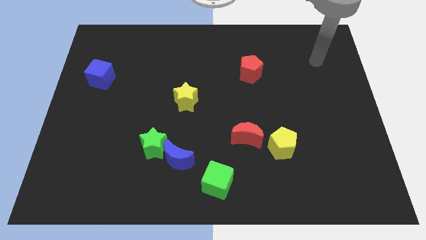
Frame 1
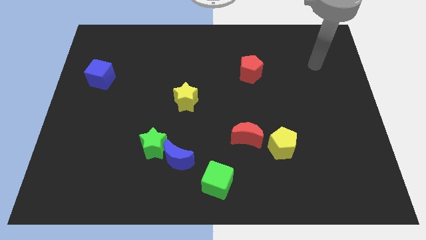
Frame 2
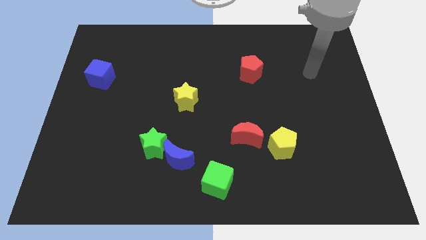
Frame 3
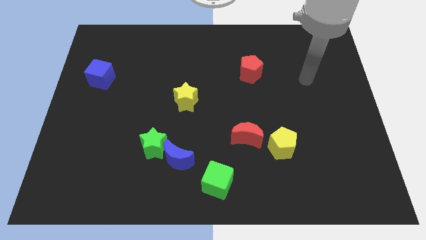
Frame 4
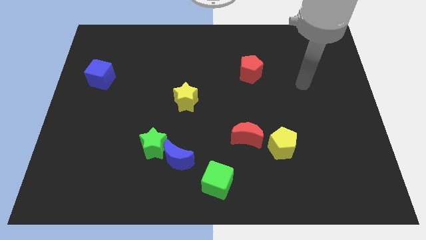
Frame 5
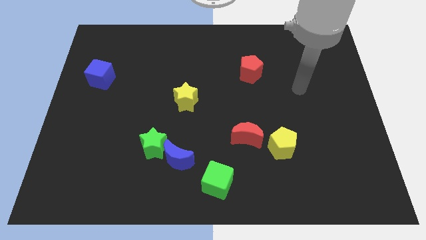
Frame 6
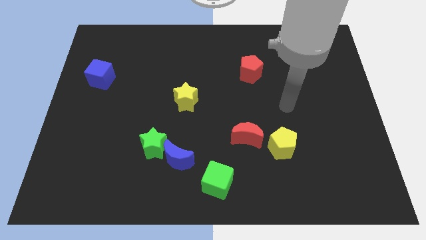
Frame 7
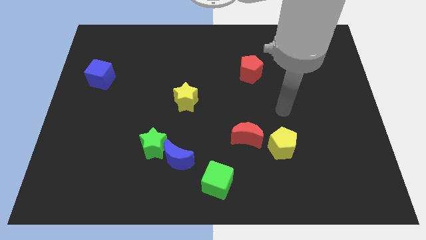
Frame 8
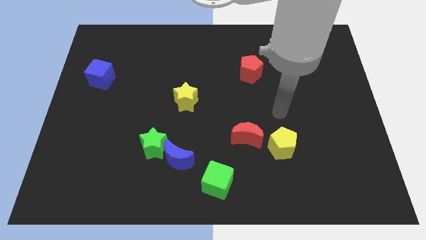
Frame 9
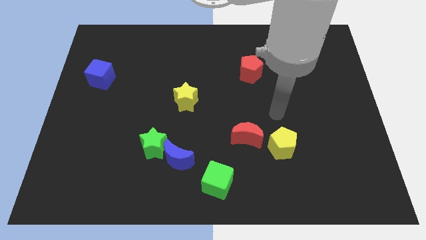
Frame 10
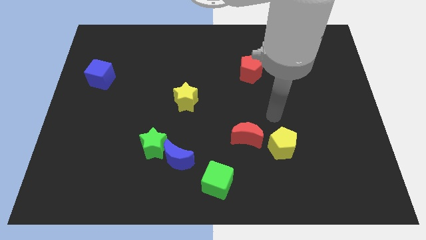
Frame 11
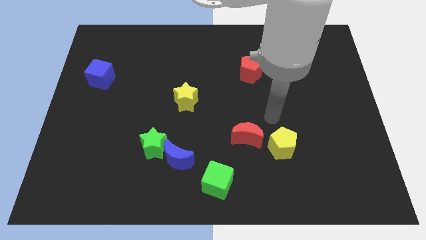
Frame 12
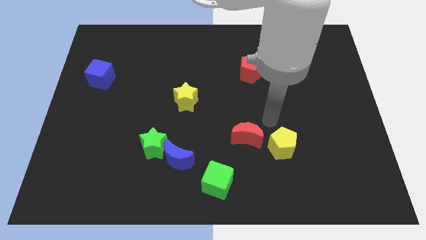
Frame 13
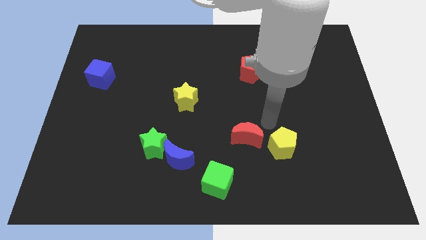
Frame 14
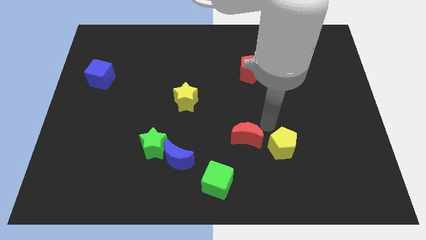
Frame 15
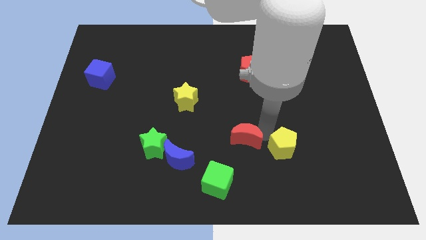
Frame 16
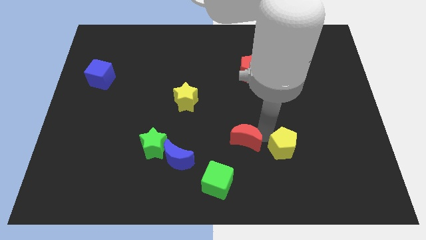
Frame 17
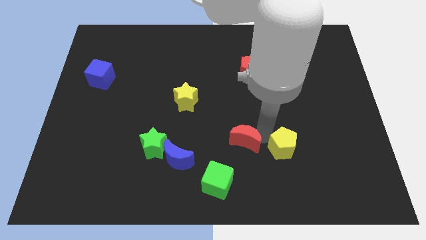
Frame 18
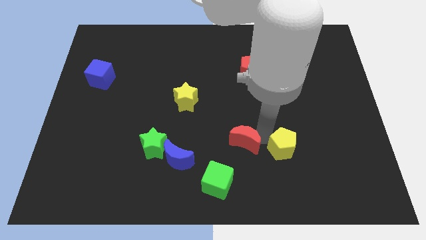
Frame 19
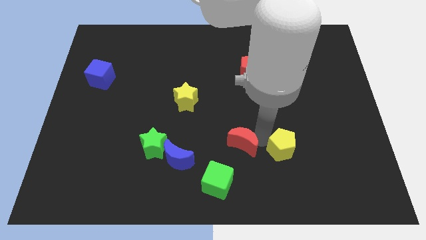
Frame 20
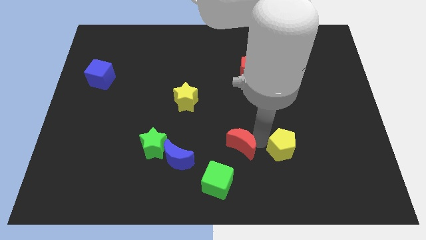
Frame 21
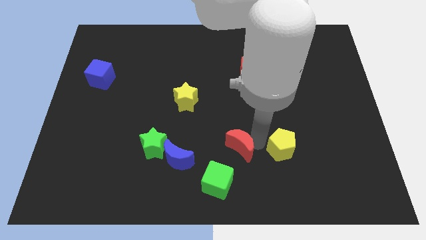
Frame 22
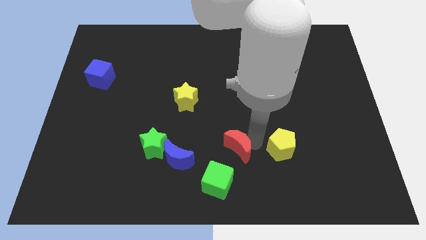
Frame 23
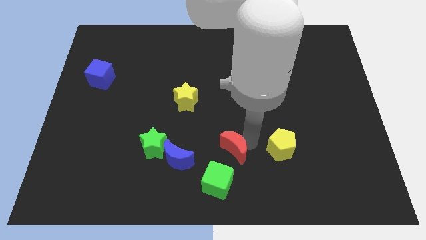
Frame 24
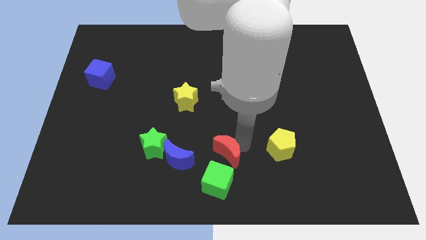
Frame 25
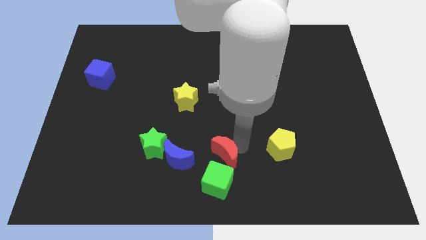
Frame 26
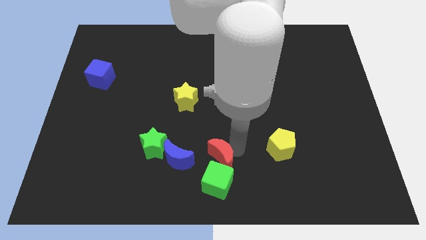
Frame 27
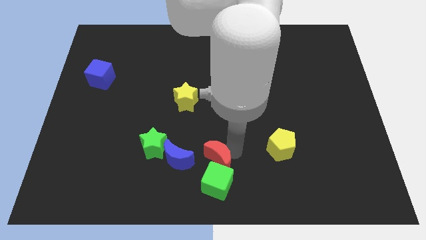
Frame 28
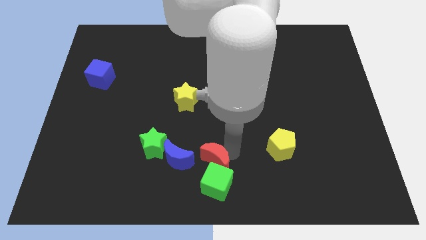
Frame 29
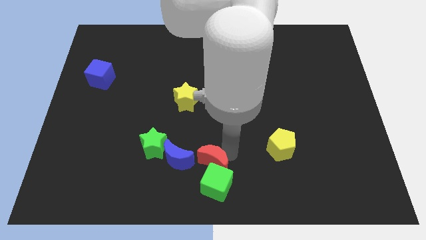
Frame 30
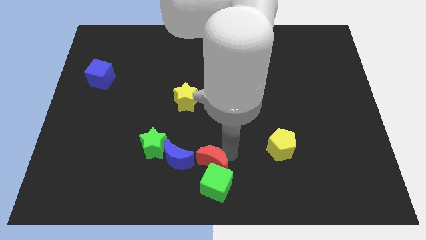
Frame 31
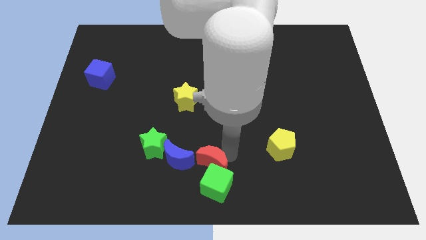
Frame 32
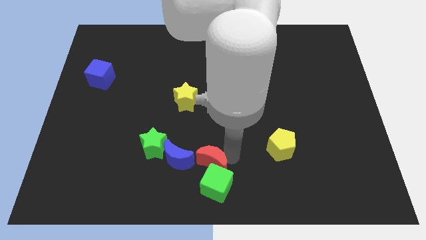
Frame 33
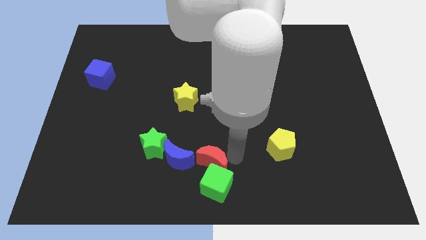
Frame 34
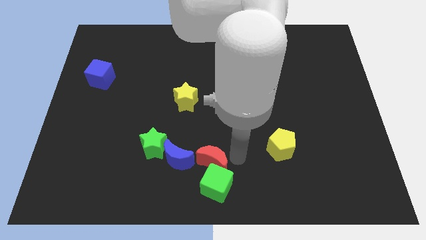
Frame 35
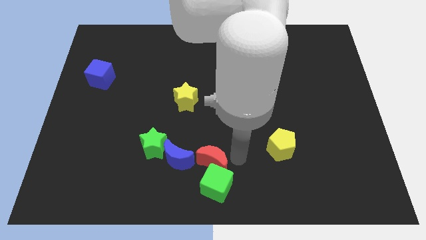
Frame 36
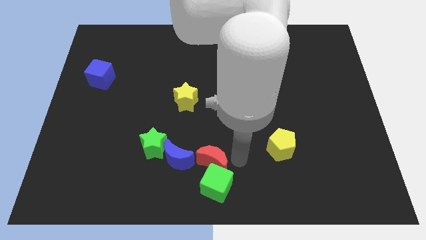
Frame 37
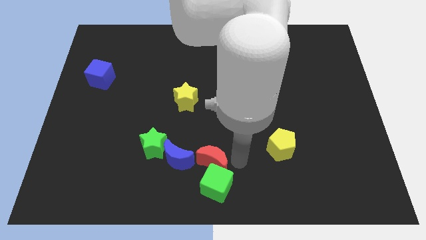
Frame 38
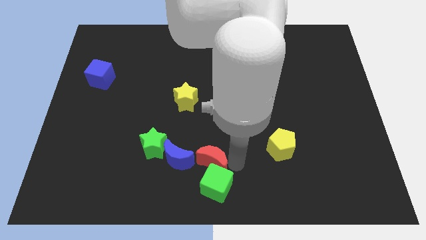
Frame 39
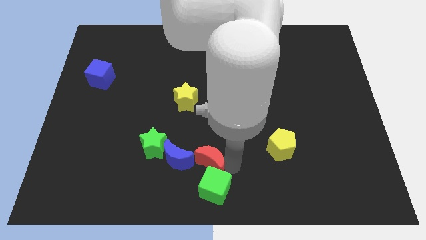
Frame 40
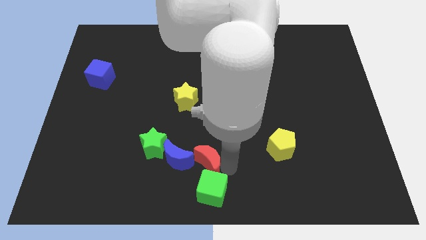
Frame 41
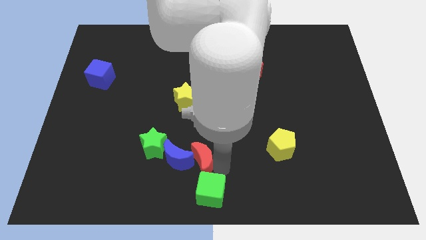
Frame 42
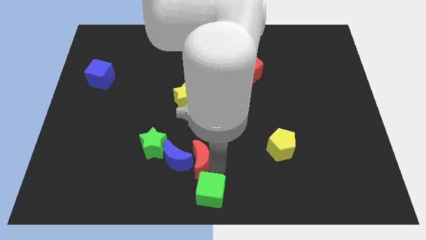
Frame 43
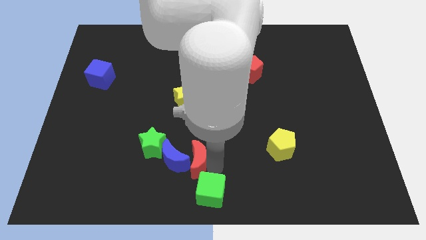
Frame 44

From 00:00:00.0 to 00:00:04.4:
put the red moon next to the blue moon

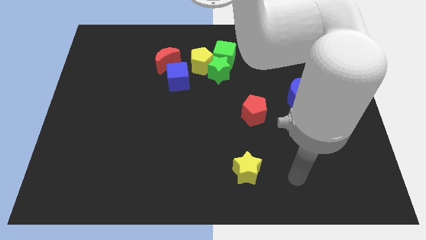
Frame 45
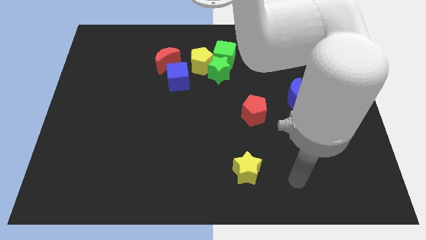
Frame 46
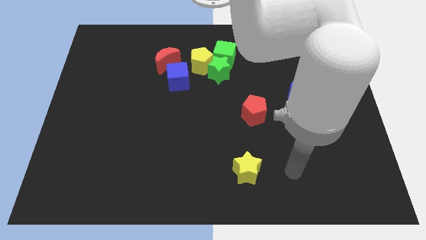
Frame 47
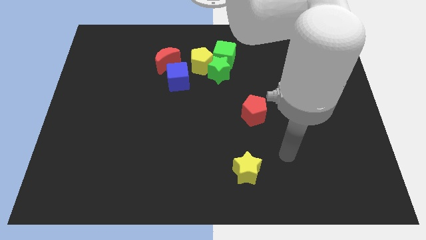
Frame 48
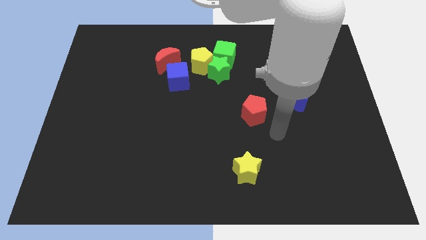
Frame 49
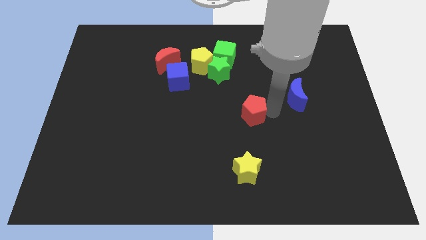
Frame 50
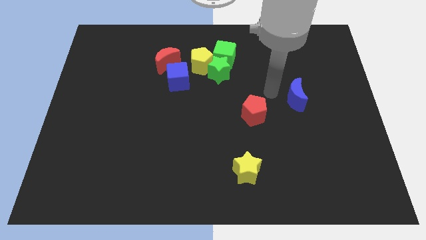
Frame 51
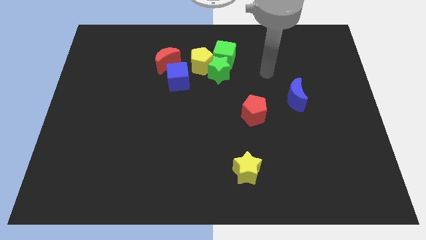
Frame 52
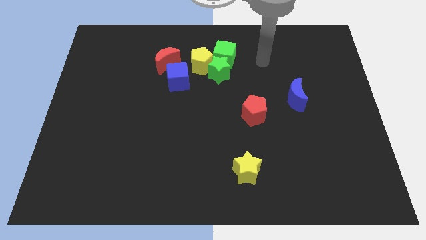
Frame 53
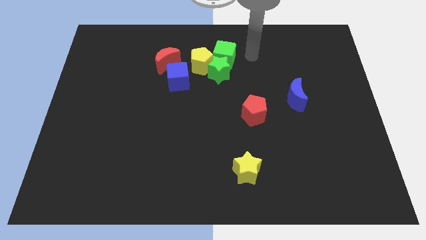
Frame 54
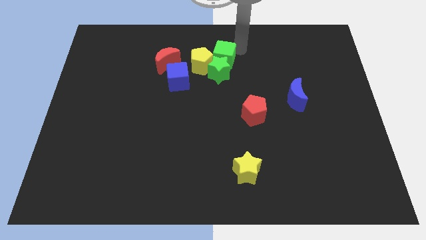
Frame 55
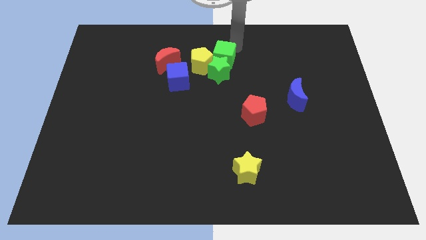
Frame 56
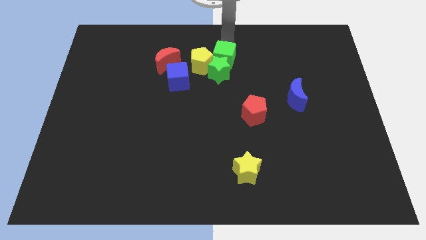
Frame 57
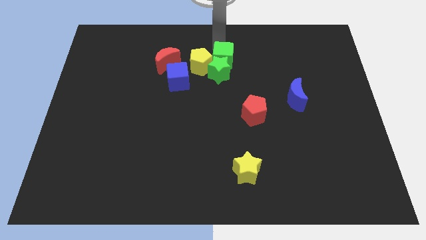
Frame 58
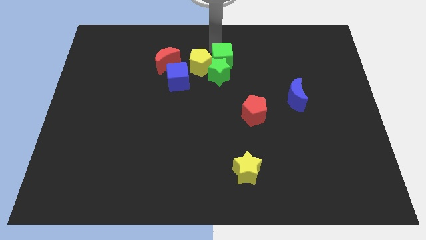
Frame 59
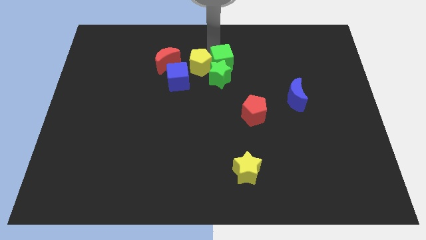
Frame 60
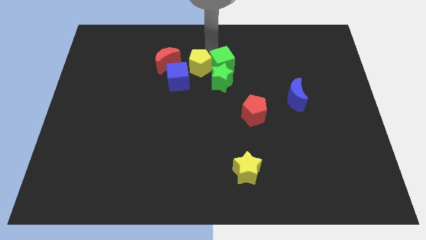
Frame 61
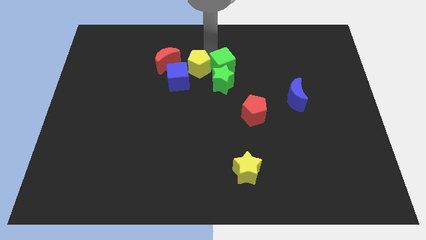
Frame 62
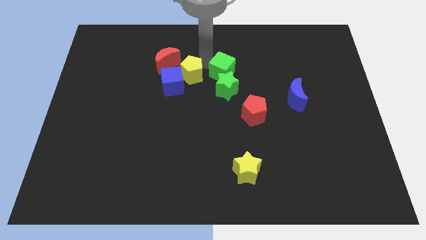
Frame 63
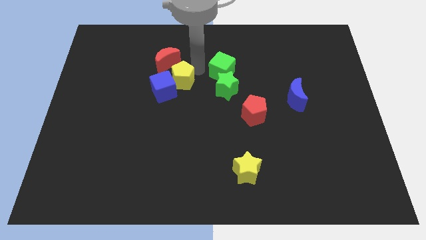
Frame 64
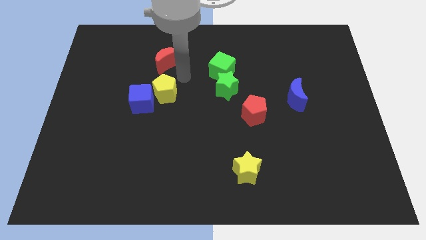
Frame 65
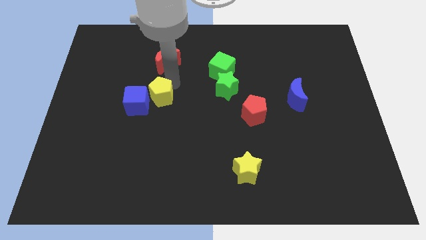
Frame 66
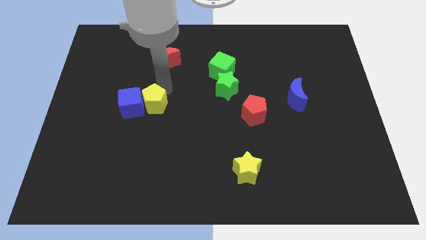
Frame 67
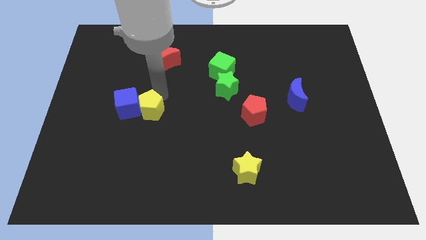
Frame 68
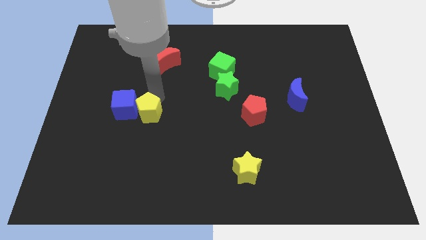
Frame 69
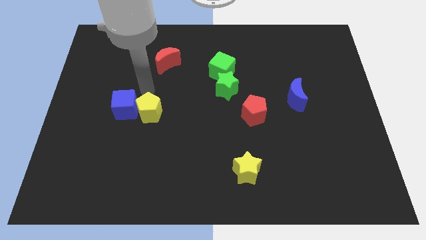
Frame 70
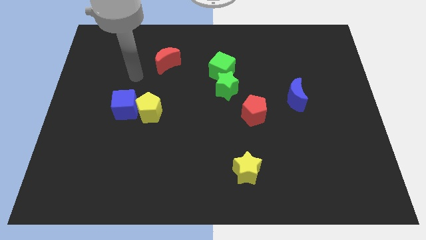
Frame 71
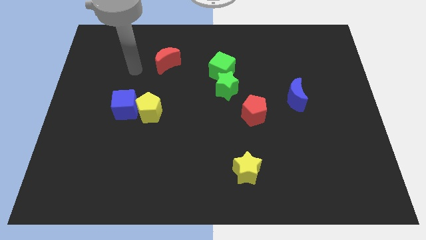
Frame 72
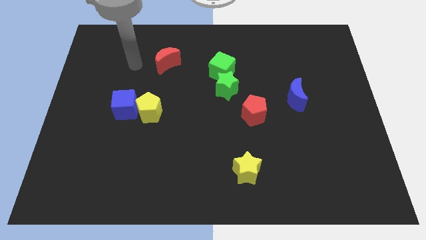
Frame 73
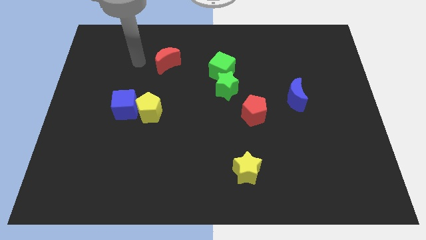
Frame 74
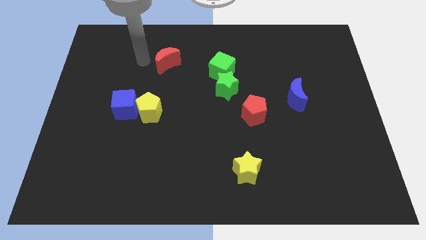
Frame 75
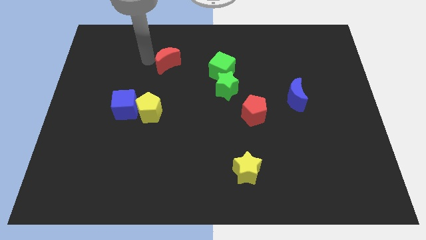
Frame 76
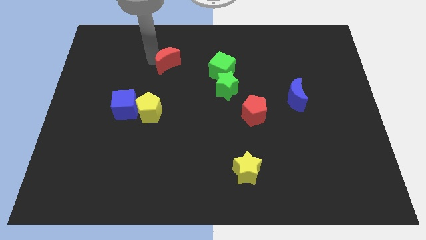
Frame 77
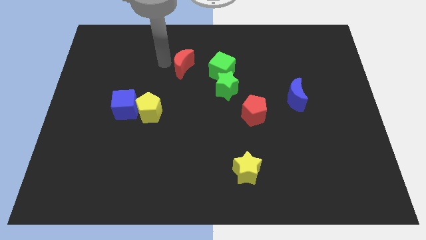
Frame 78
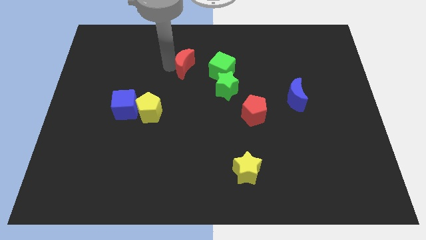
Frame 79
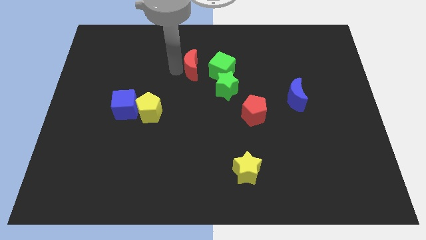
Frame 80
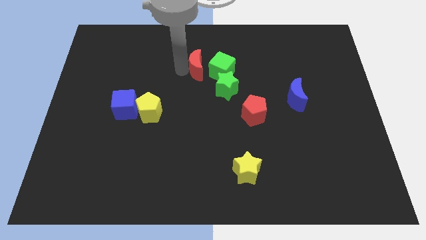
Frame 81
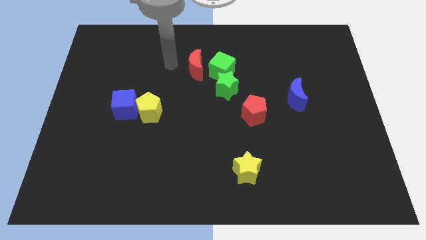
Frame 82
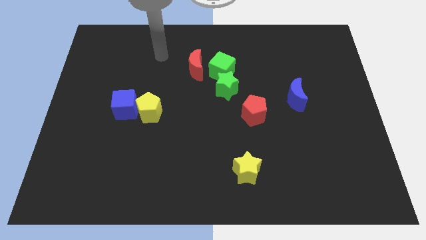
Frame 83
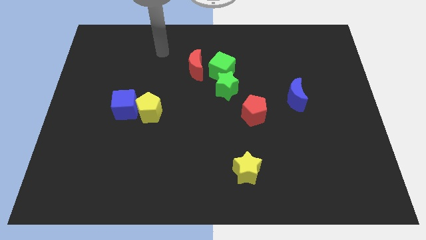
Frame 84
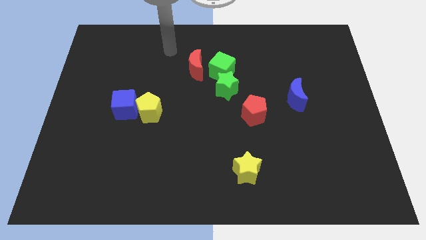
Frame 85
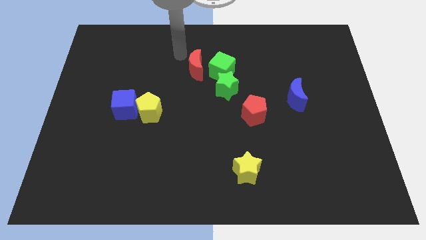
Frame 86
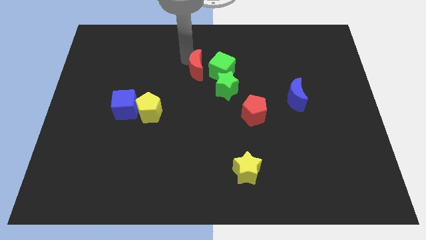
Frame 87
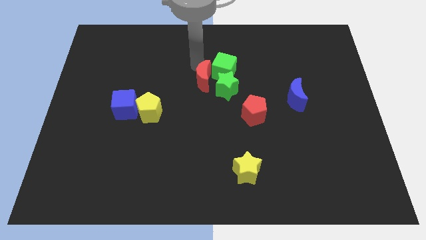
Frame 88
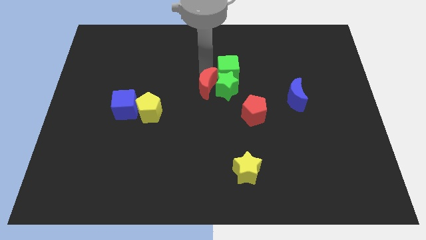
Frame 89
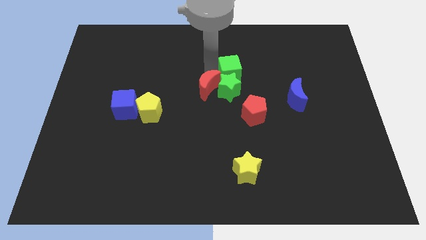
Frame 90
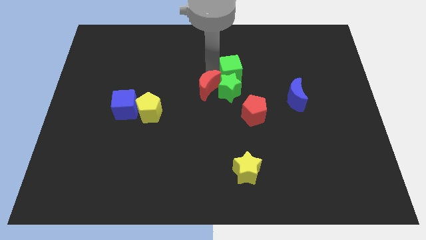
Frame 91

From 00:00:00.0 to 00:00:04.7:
put the red moon next to the green star
